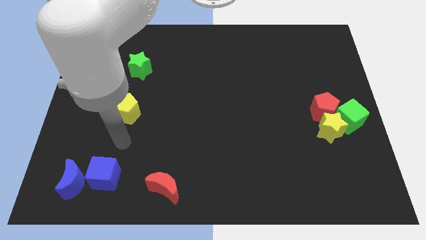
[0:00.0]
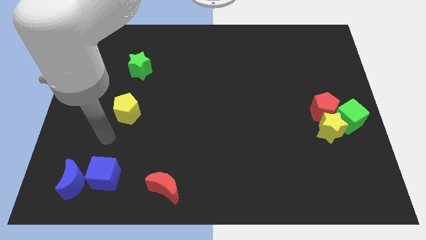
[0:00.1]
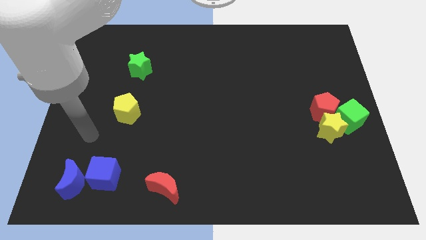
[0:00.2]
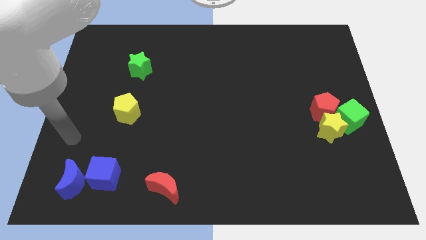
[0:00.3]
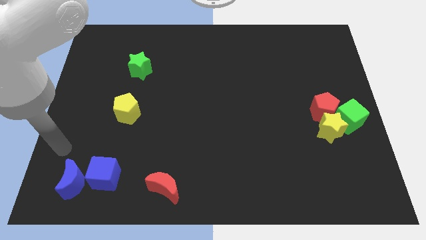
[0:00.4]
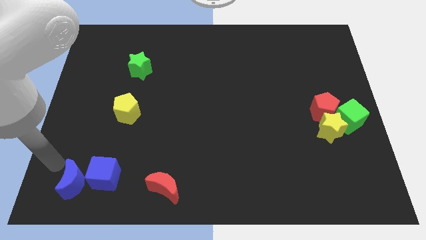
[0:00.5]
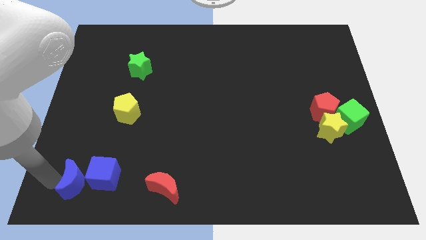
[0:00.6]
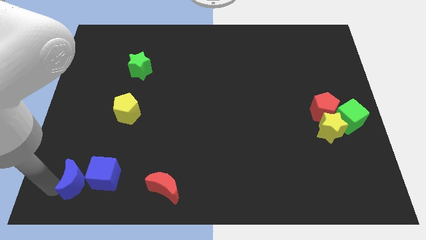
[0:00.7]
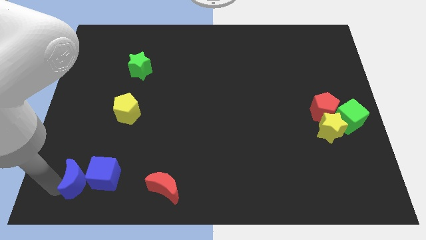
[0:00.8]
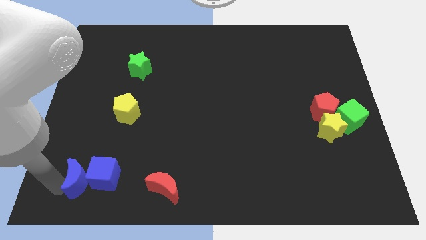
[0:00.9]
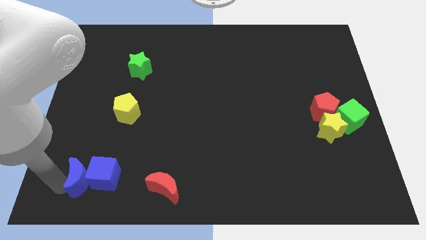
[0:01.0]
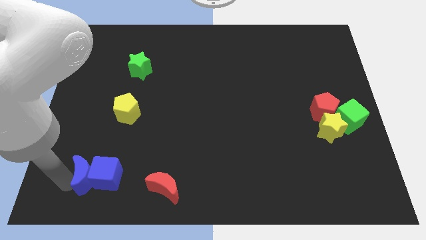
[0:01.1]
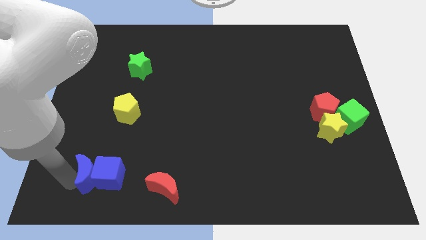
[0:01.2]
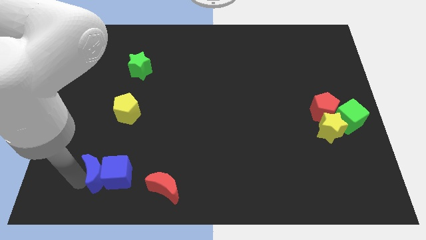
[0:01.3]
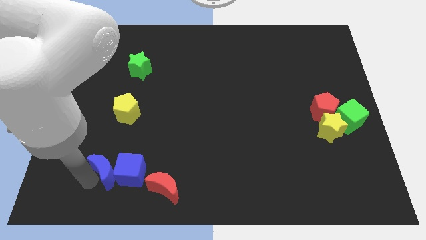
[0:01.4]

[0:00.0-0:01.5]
push blue moon into the blue cube

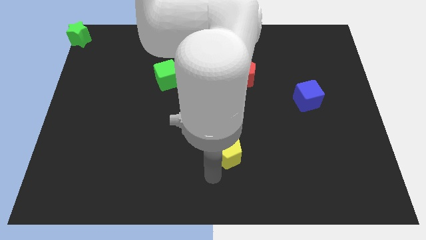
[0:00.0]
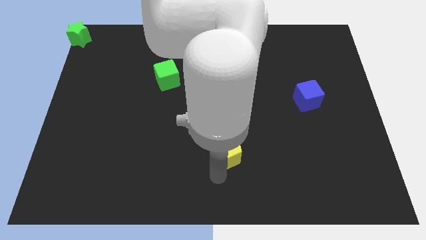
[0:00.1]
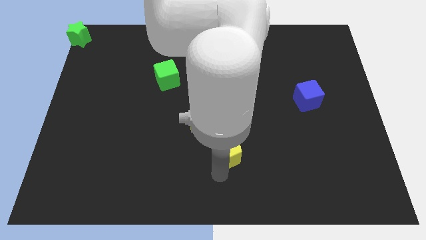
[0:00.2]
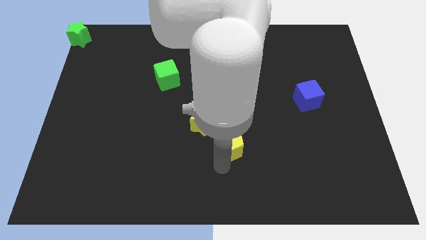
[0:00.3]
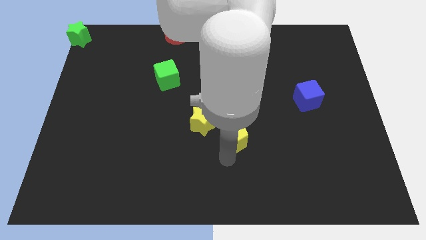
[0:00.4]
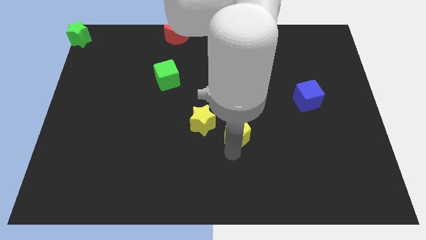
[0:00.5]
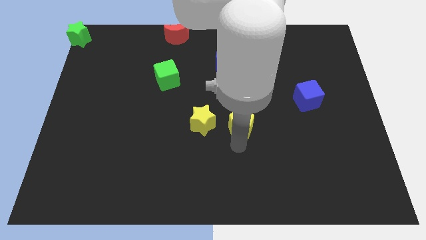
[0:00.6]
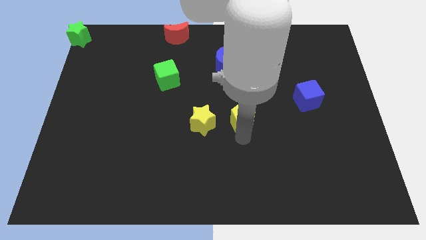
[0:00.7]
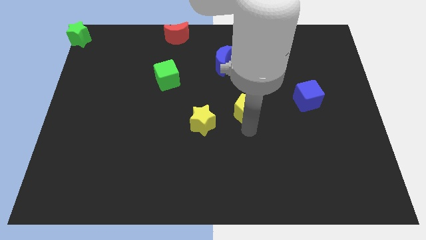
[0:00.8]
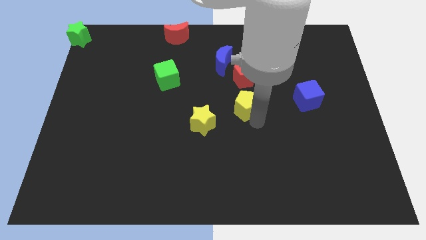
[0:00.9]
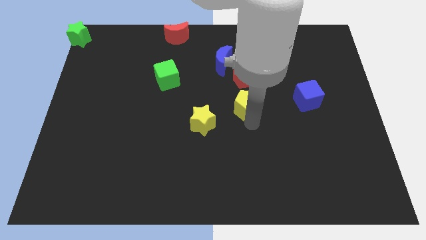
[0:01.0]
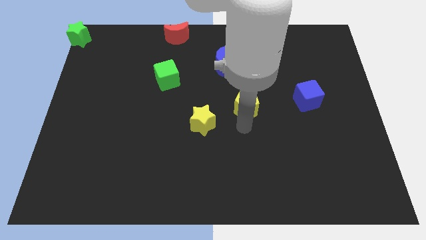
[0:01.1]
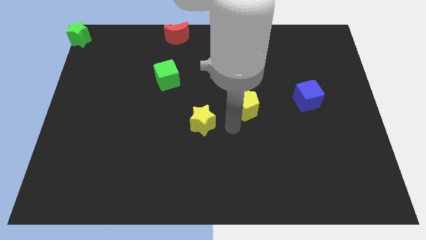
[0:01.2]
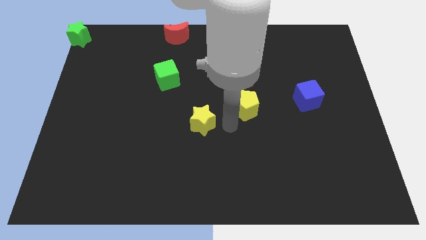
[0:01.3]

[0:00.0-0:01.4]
move the yellow pentagon below the red pentagon

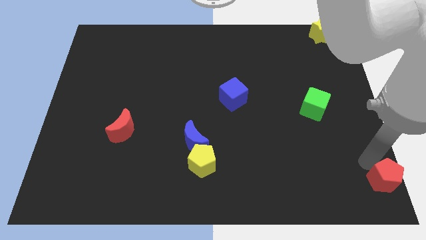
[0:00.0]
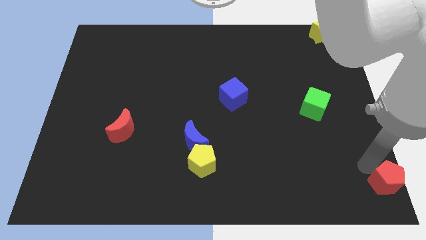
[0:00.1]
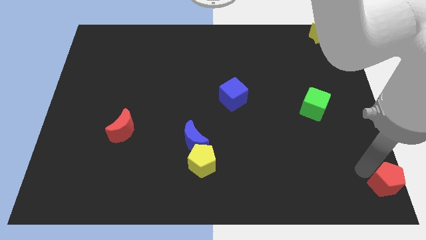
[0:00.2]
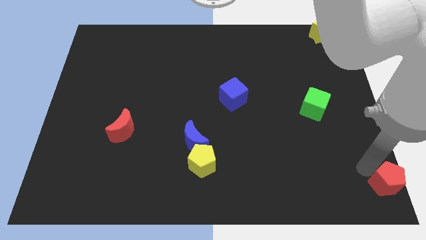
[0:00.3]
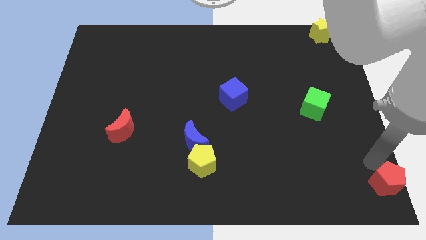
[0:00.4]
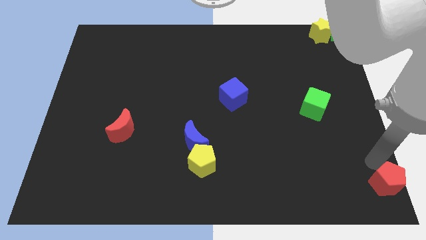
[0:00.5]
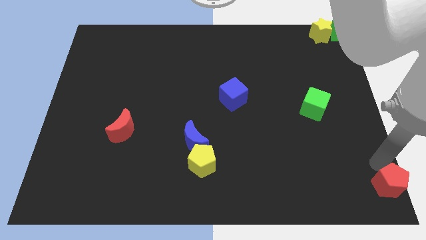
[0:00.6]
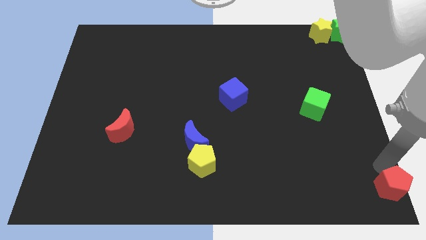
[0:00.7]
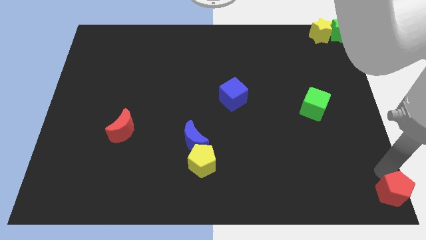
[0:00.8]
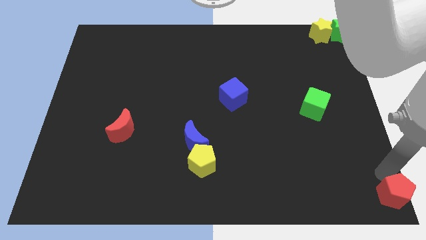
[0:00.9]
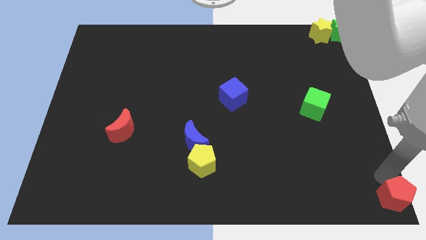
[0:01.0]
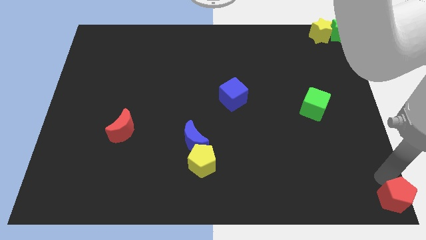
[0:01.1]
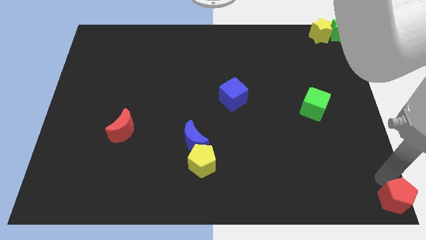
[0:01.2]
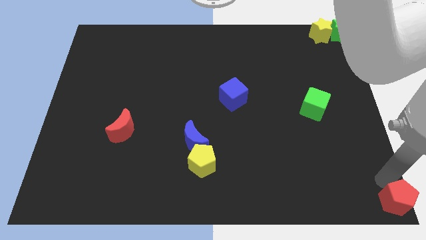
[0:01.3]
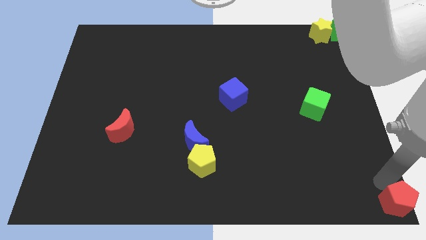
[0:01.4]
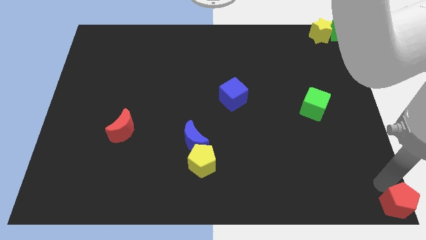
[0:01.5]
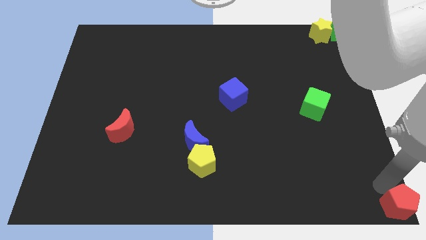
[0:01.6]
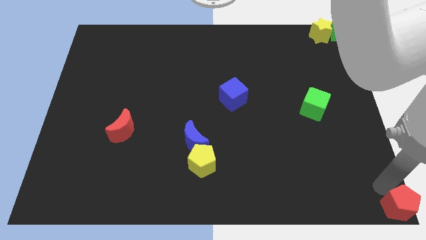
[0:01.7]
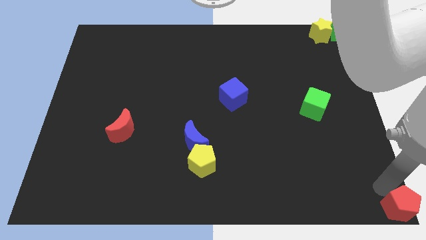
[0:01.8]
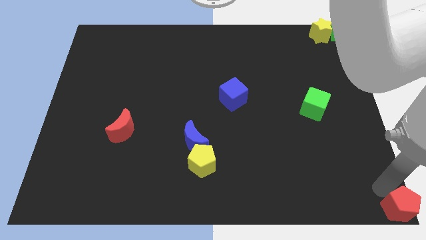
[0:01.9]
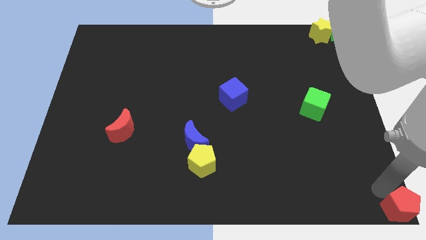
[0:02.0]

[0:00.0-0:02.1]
place the red pentagon at the bottom right side corner

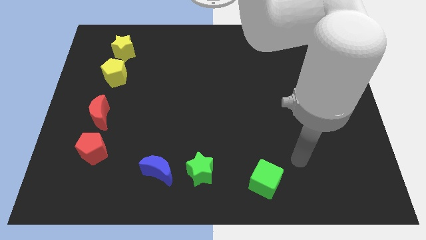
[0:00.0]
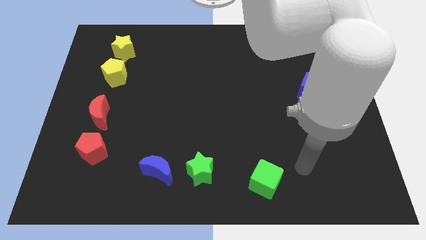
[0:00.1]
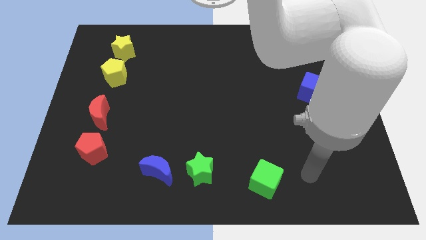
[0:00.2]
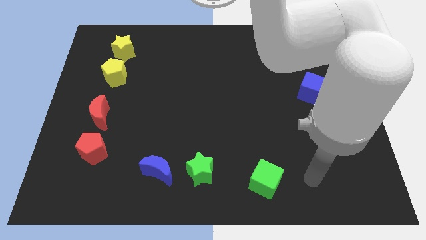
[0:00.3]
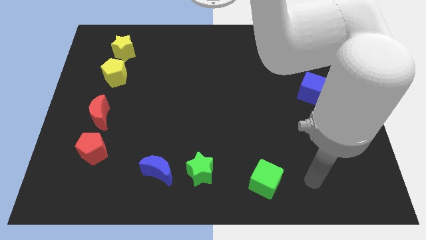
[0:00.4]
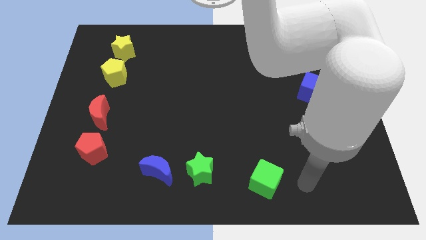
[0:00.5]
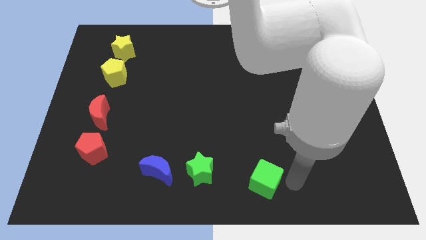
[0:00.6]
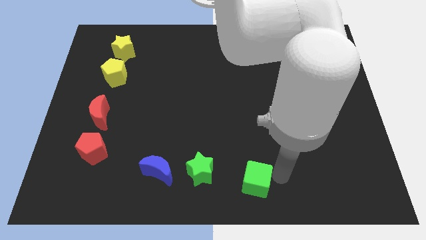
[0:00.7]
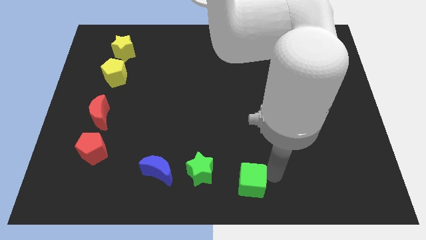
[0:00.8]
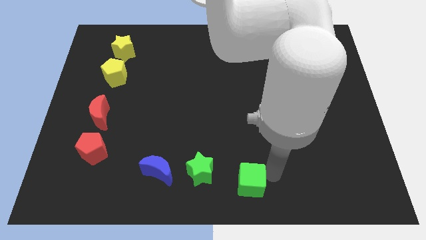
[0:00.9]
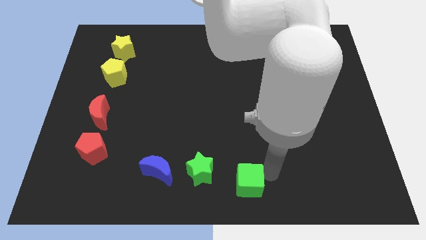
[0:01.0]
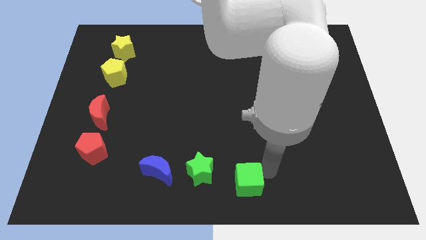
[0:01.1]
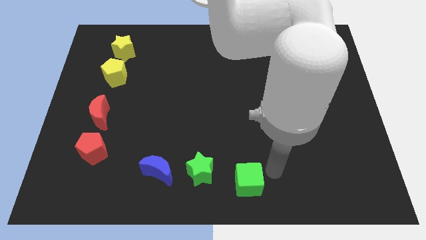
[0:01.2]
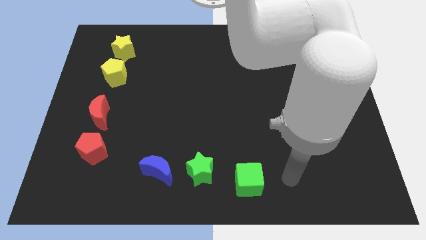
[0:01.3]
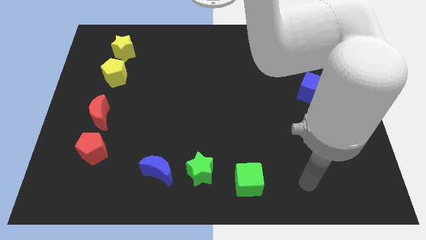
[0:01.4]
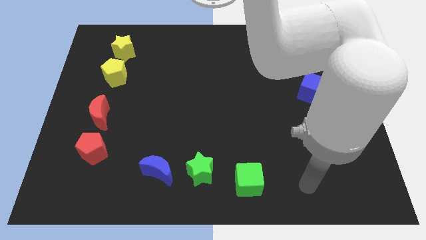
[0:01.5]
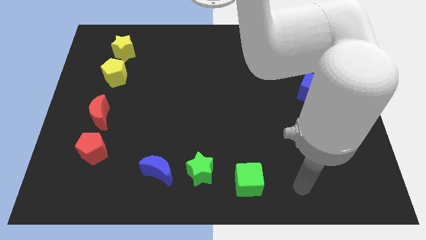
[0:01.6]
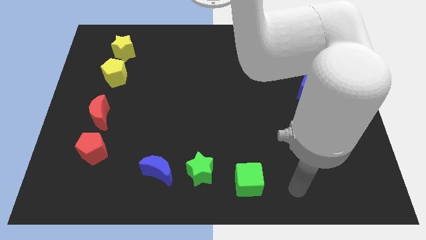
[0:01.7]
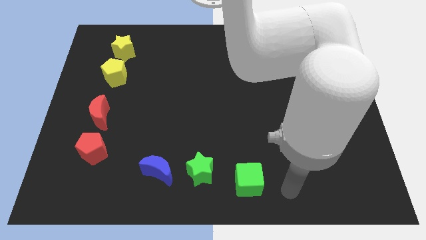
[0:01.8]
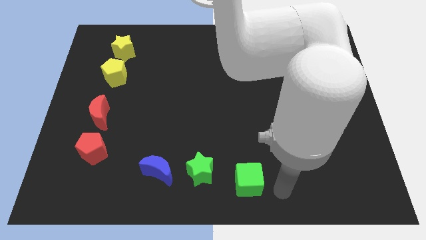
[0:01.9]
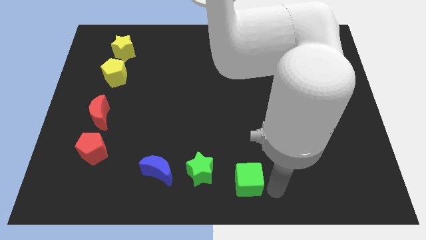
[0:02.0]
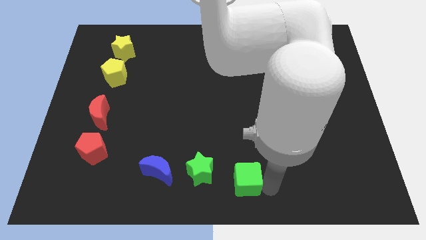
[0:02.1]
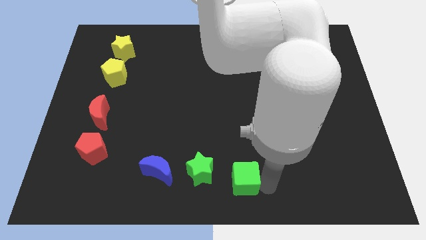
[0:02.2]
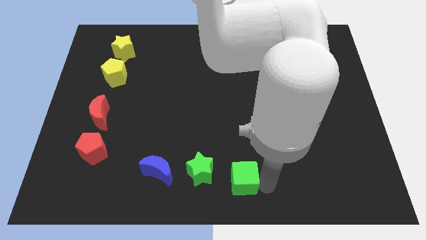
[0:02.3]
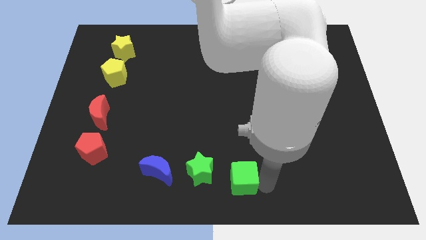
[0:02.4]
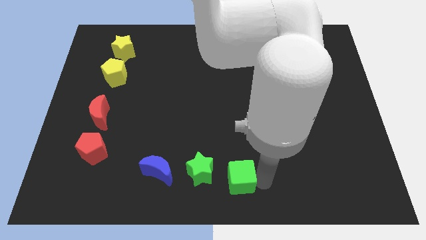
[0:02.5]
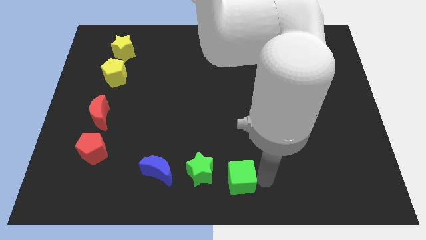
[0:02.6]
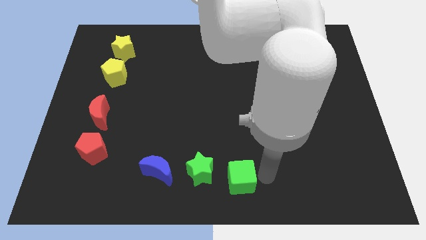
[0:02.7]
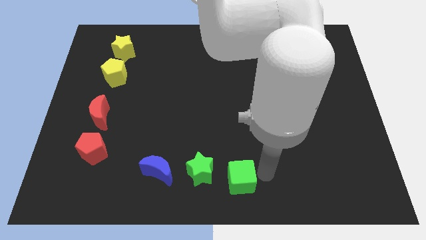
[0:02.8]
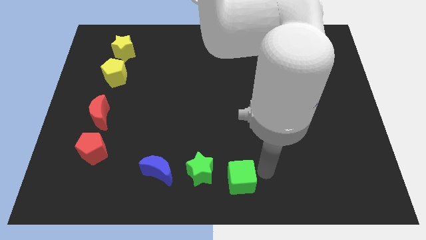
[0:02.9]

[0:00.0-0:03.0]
place the green cube horizontally right to the green star at the bottom

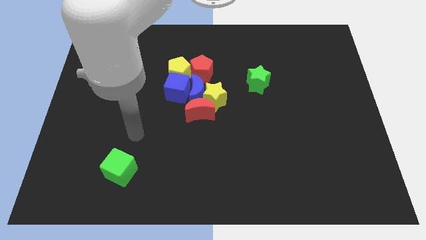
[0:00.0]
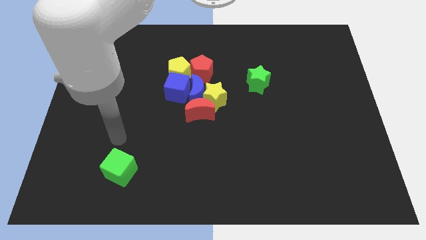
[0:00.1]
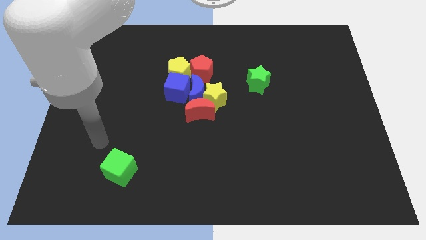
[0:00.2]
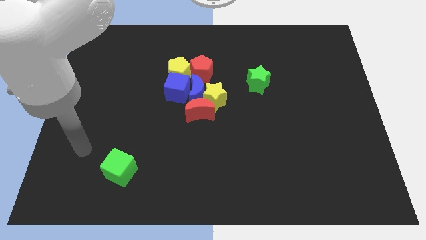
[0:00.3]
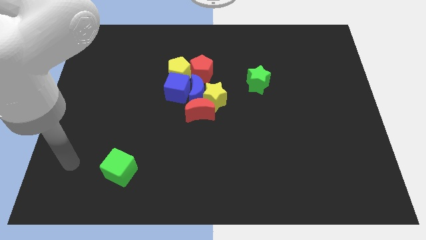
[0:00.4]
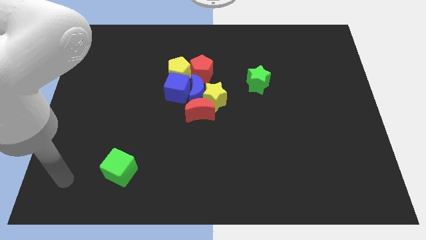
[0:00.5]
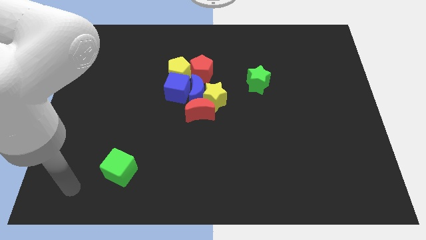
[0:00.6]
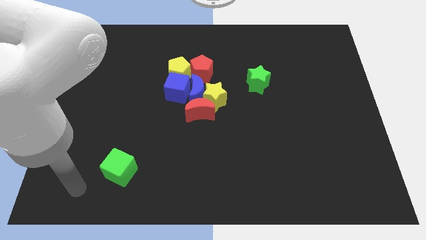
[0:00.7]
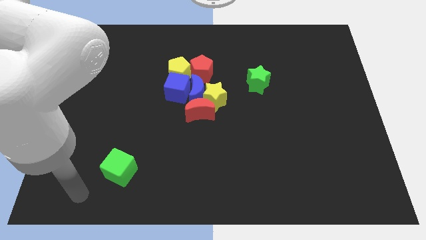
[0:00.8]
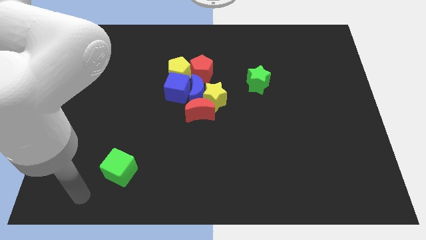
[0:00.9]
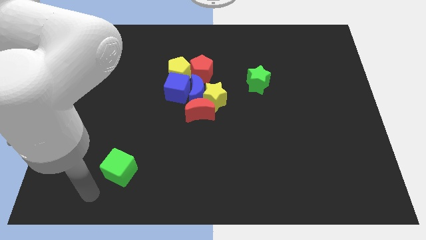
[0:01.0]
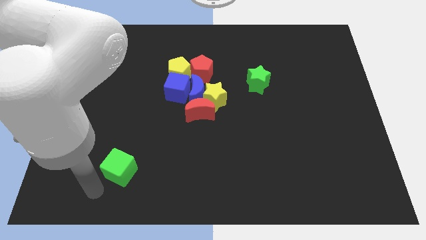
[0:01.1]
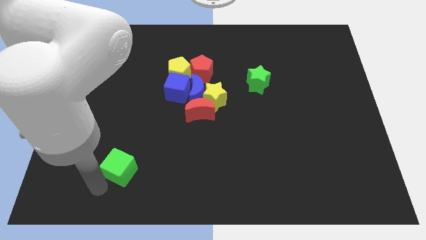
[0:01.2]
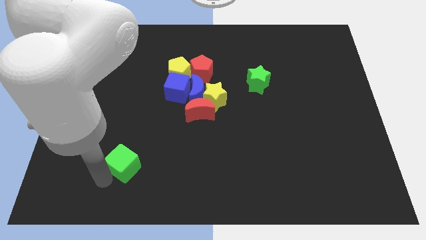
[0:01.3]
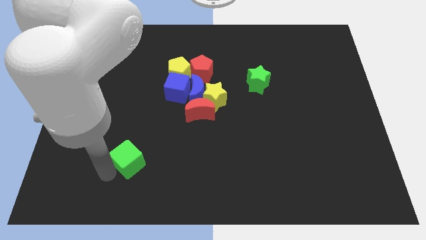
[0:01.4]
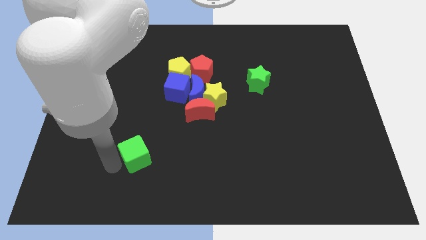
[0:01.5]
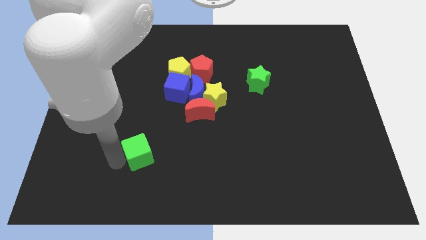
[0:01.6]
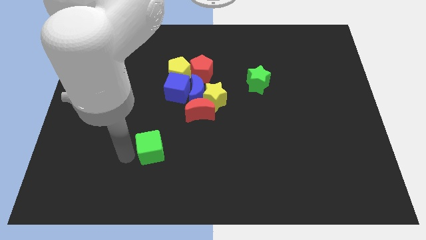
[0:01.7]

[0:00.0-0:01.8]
drag the green cube towards the red crescent
